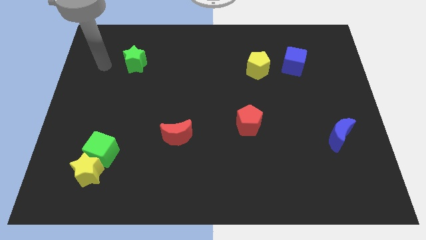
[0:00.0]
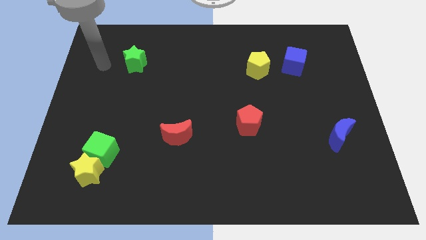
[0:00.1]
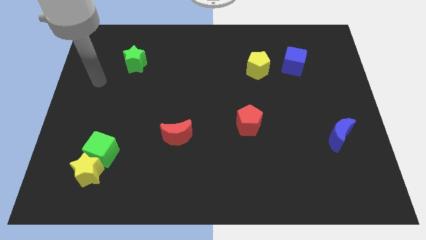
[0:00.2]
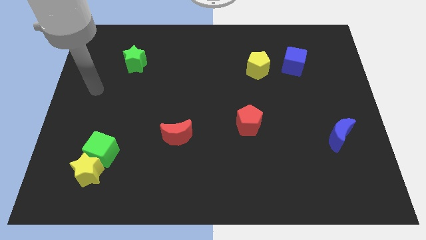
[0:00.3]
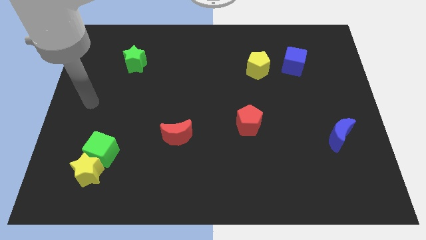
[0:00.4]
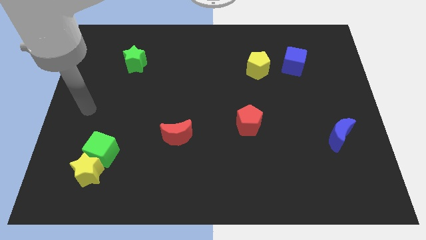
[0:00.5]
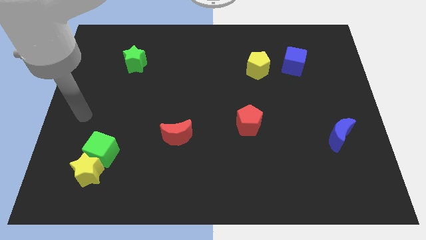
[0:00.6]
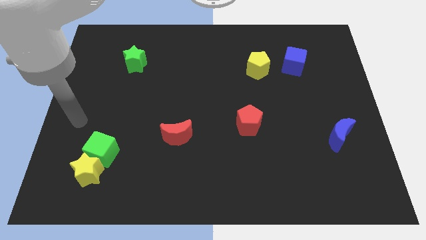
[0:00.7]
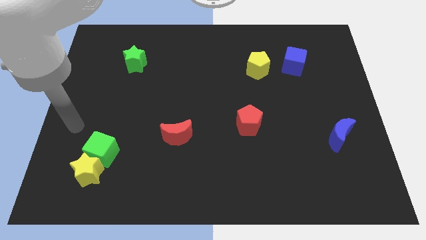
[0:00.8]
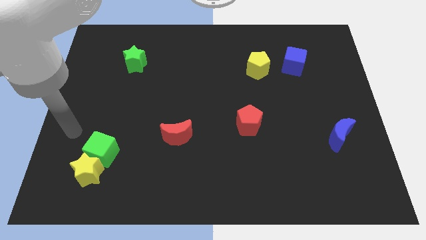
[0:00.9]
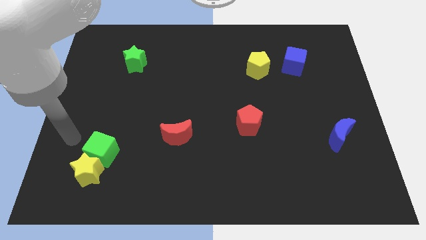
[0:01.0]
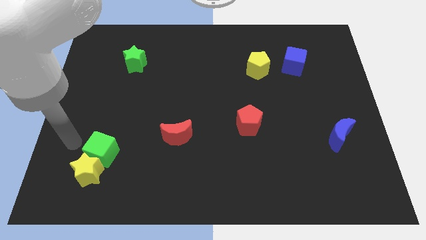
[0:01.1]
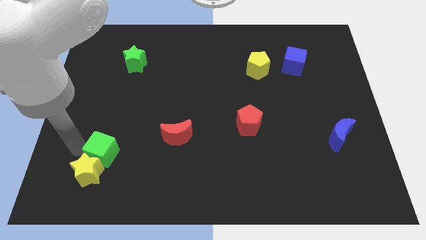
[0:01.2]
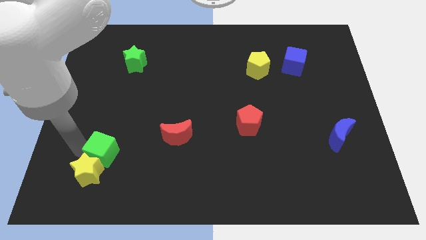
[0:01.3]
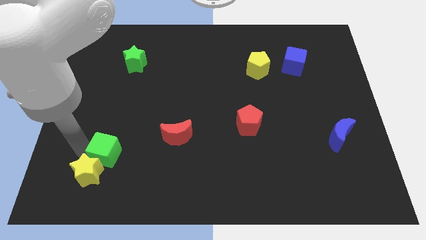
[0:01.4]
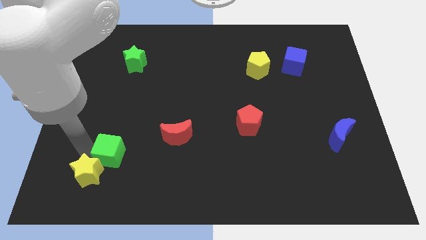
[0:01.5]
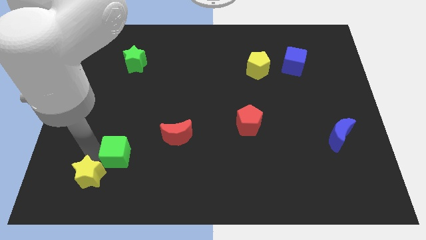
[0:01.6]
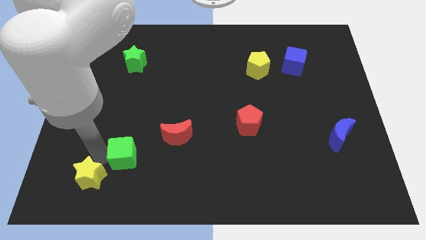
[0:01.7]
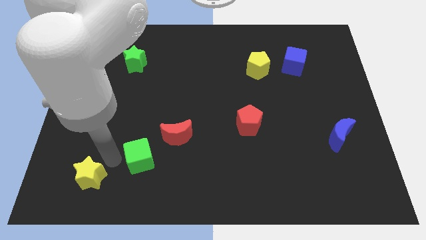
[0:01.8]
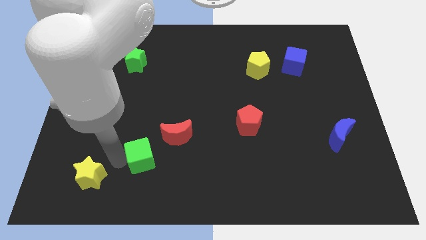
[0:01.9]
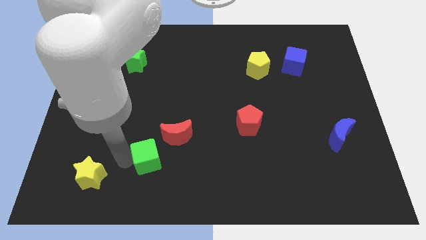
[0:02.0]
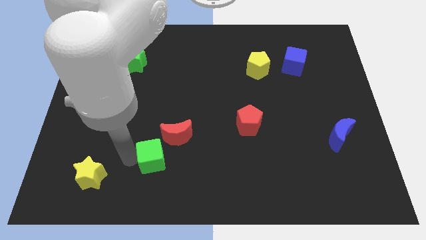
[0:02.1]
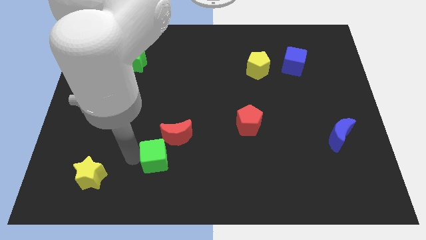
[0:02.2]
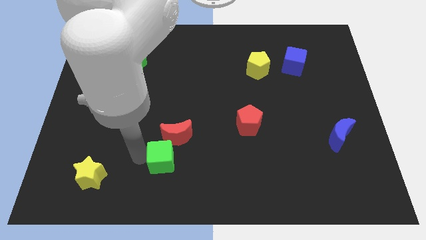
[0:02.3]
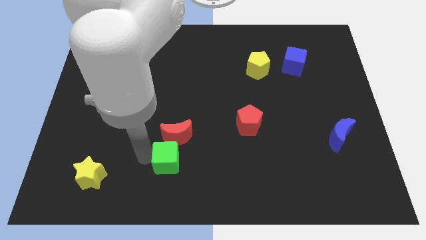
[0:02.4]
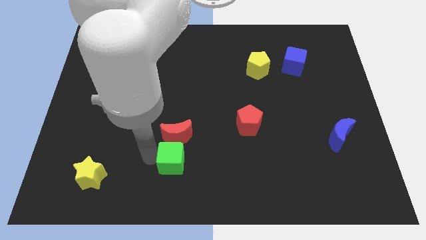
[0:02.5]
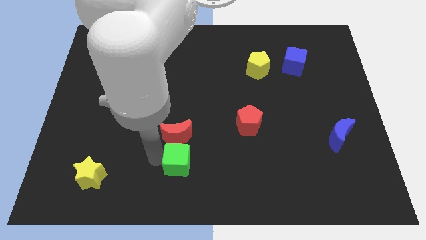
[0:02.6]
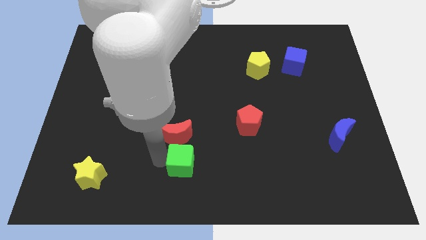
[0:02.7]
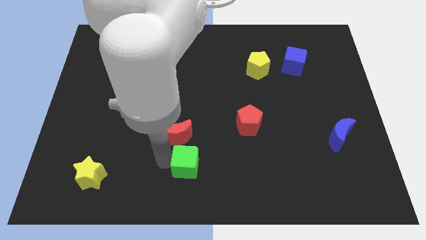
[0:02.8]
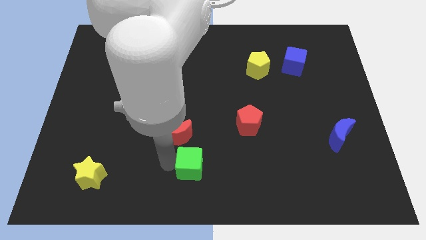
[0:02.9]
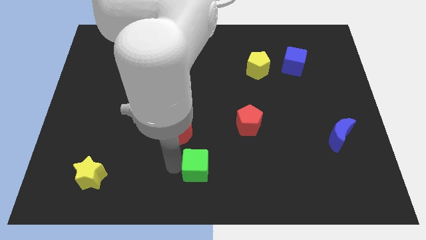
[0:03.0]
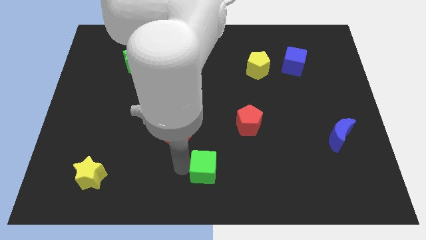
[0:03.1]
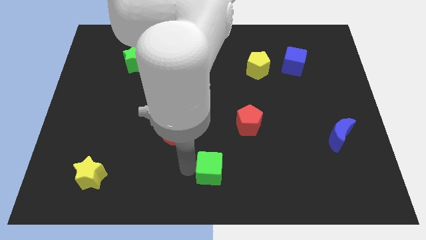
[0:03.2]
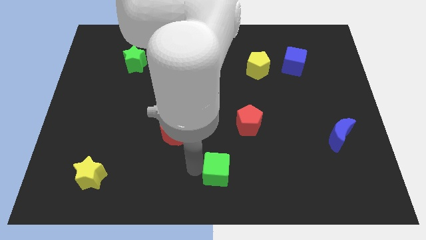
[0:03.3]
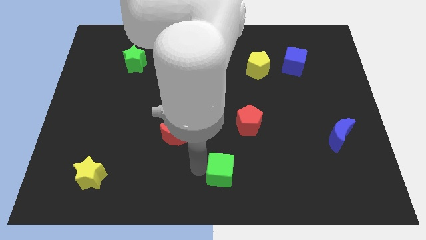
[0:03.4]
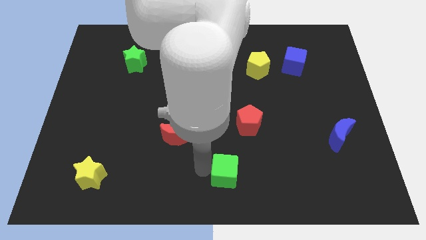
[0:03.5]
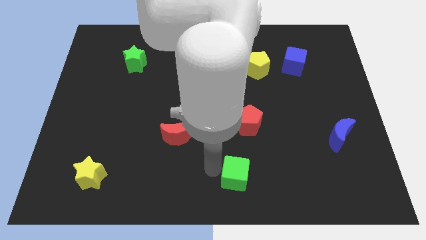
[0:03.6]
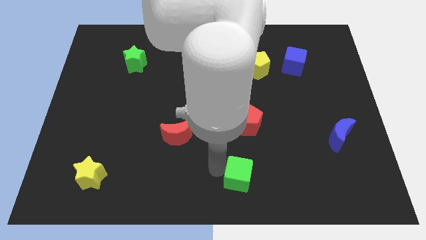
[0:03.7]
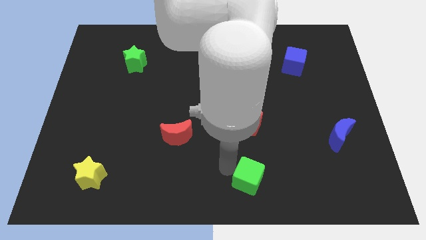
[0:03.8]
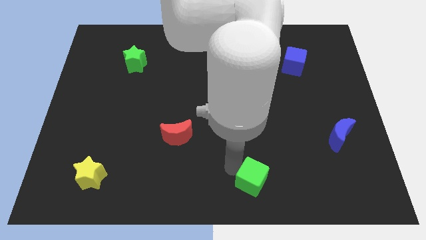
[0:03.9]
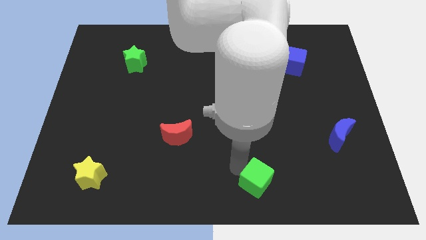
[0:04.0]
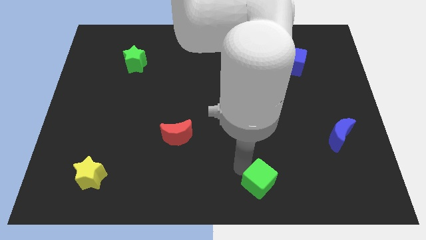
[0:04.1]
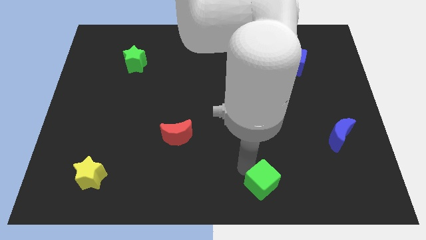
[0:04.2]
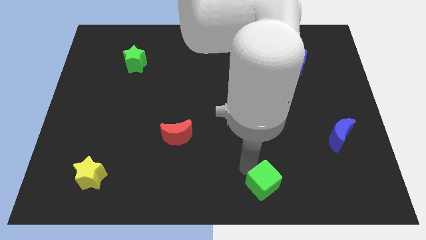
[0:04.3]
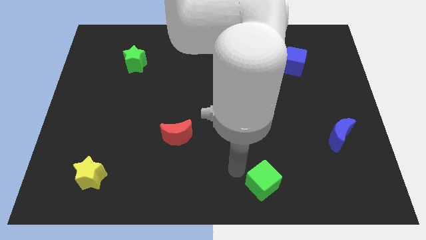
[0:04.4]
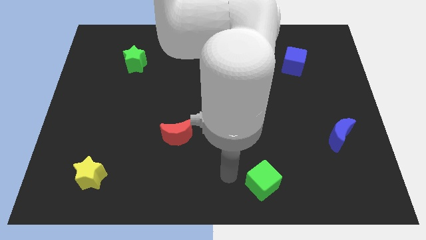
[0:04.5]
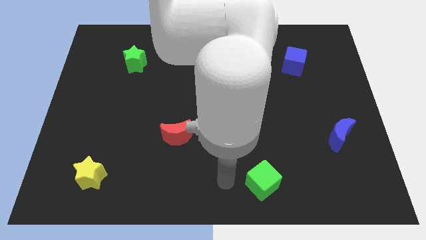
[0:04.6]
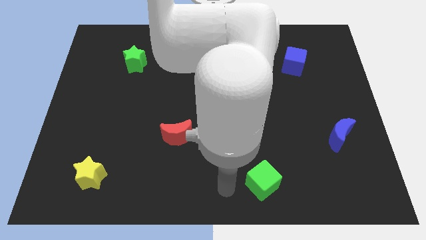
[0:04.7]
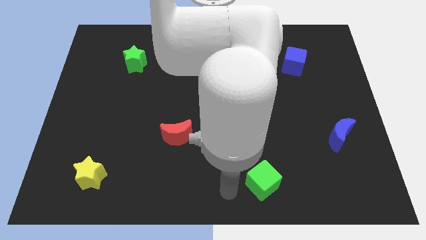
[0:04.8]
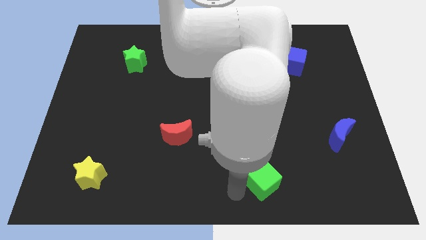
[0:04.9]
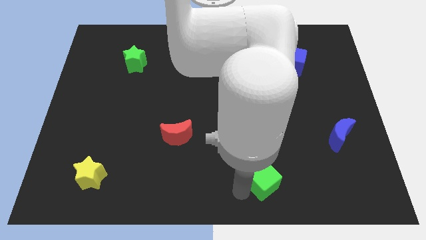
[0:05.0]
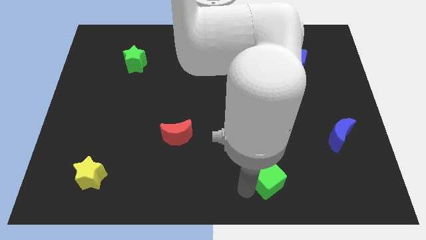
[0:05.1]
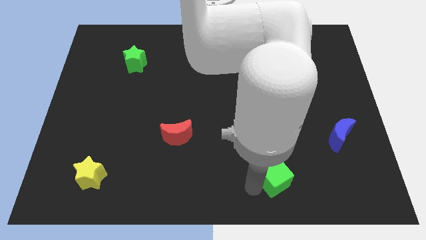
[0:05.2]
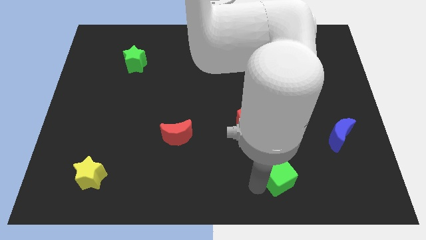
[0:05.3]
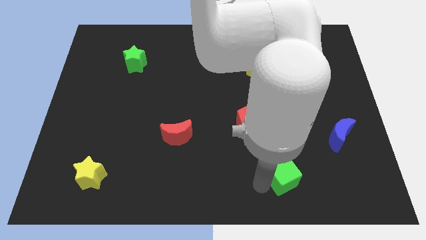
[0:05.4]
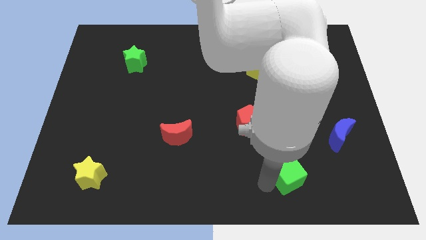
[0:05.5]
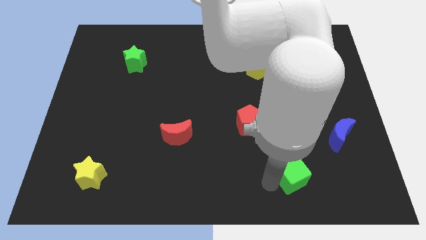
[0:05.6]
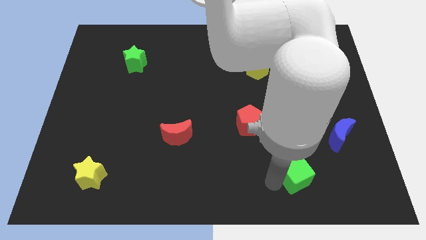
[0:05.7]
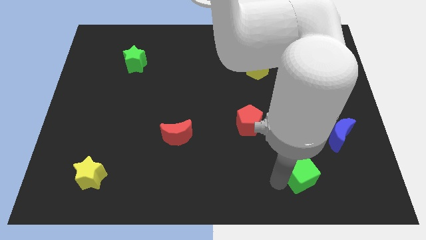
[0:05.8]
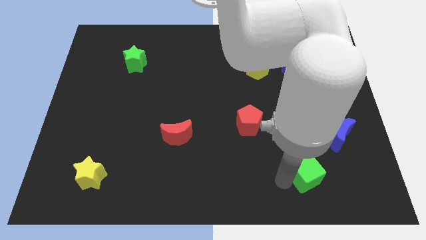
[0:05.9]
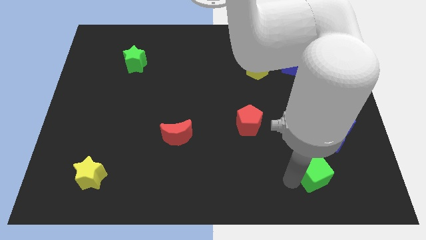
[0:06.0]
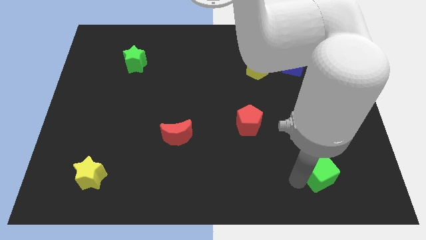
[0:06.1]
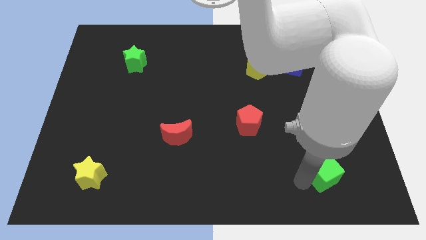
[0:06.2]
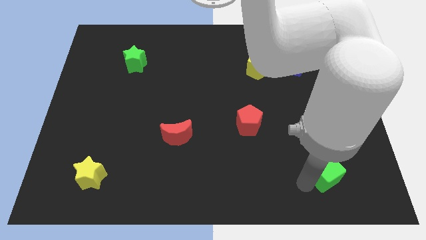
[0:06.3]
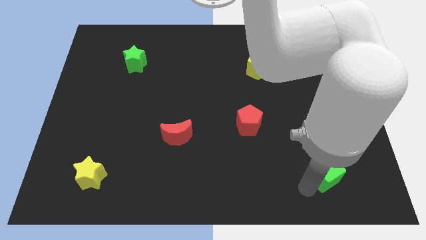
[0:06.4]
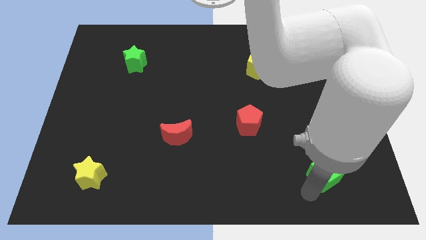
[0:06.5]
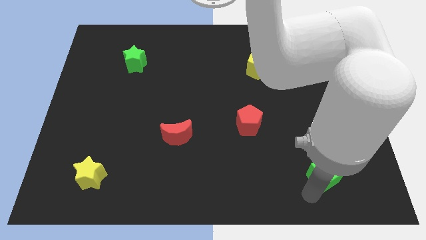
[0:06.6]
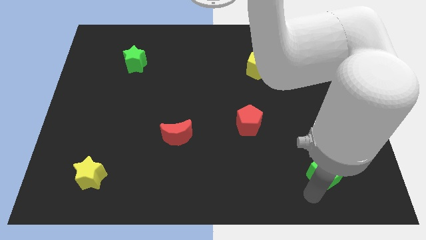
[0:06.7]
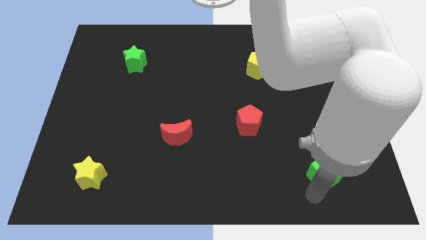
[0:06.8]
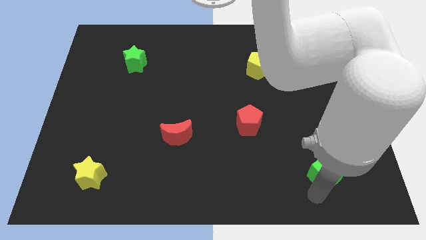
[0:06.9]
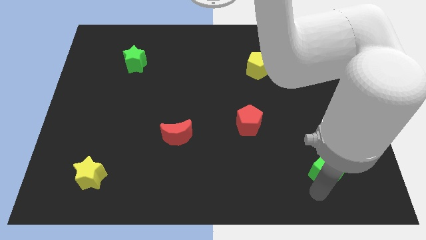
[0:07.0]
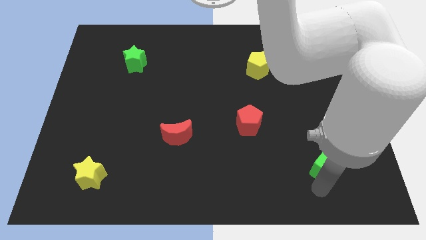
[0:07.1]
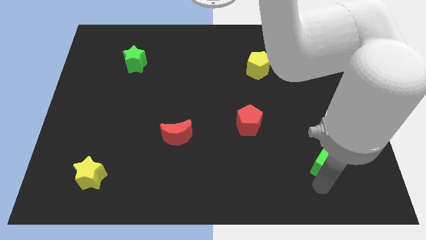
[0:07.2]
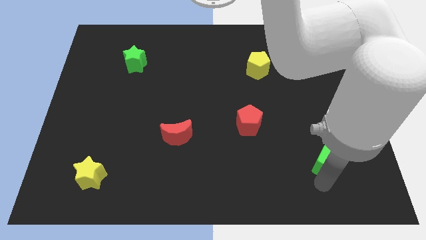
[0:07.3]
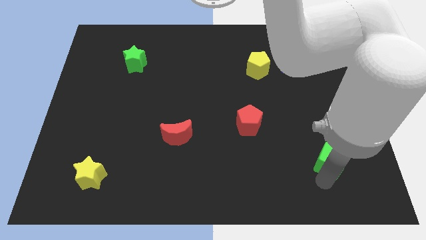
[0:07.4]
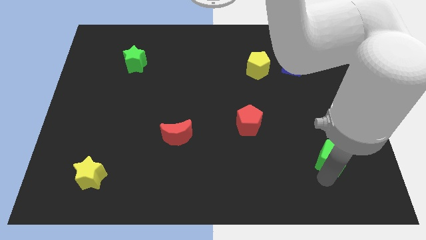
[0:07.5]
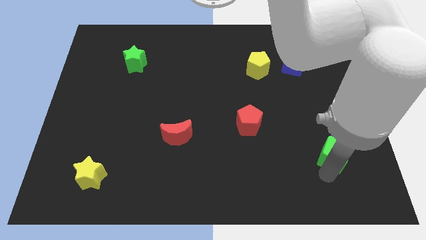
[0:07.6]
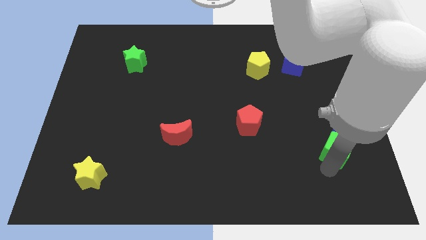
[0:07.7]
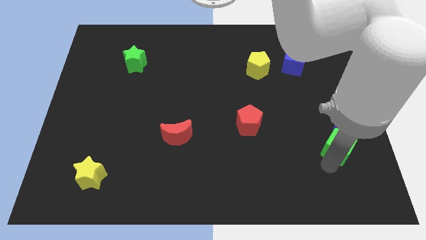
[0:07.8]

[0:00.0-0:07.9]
slide the green cube close to the blue moon

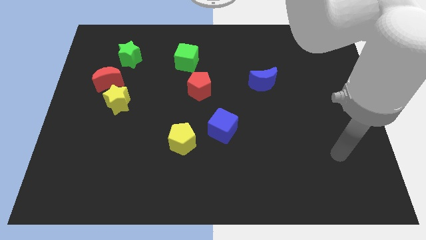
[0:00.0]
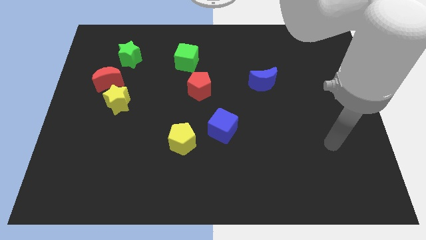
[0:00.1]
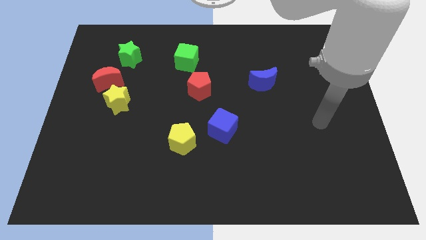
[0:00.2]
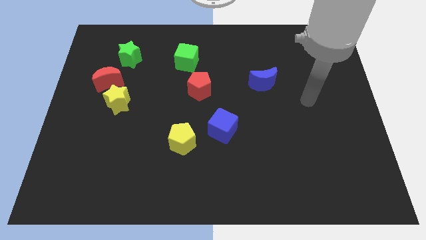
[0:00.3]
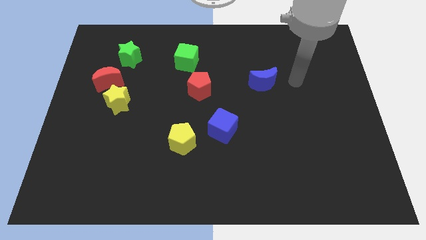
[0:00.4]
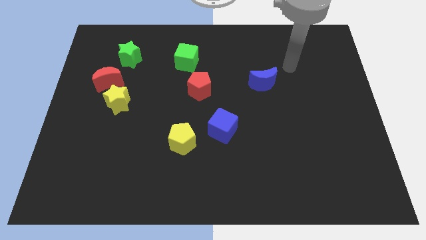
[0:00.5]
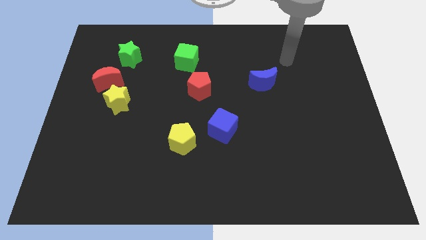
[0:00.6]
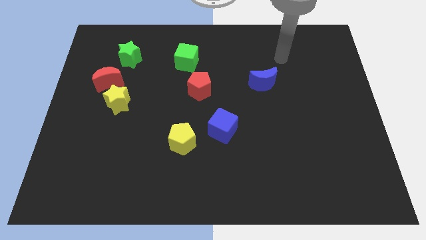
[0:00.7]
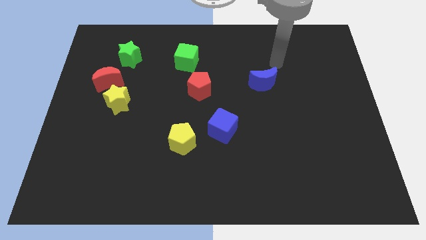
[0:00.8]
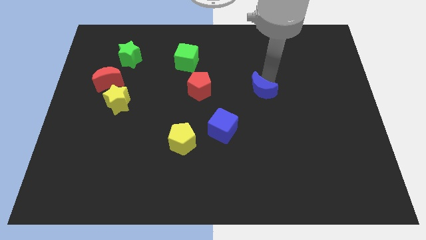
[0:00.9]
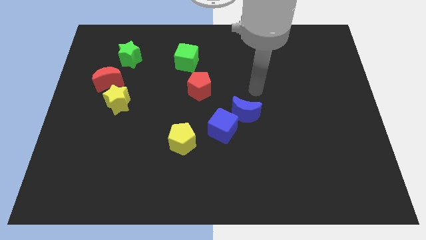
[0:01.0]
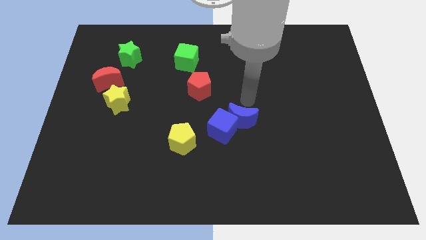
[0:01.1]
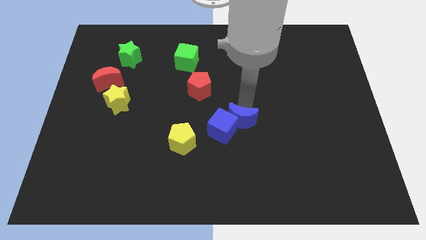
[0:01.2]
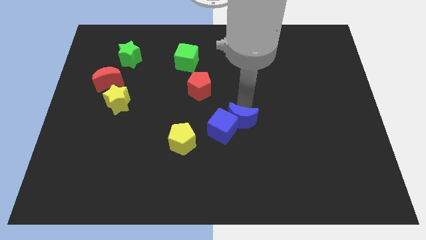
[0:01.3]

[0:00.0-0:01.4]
move the blue moon to the blue cube
